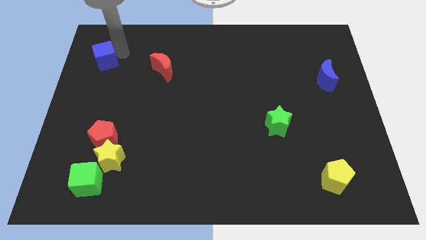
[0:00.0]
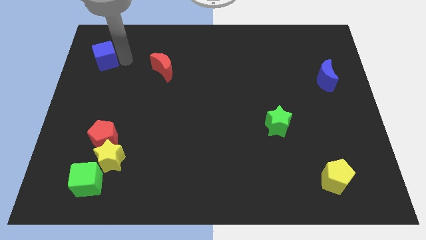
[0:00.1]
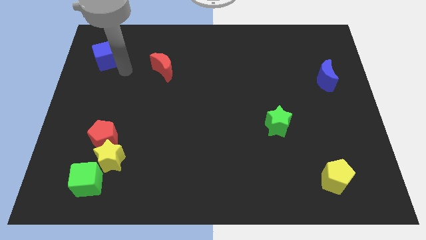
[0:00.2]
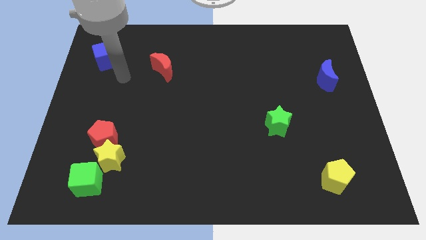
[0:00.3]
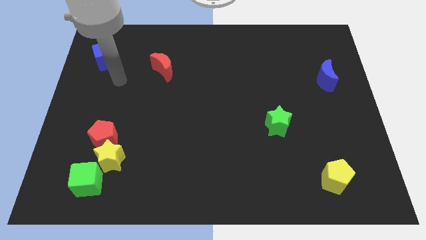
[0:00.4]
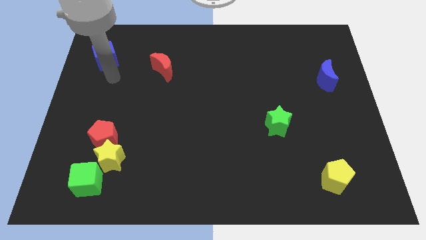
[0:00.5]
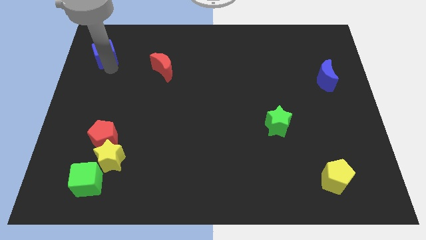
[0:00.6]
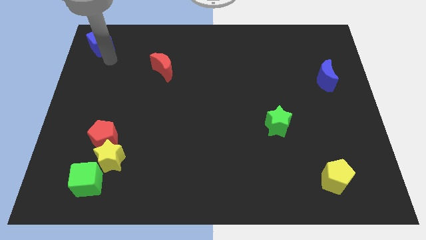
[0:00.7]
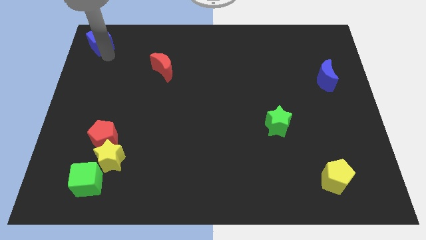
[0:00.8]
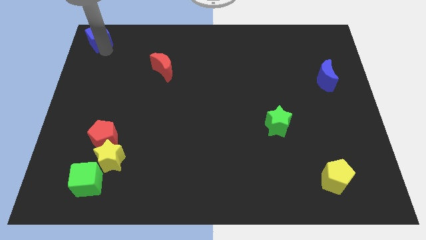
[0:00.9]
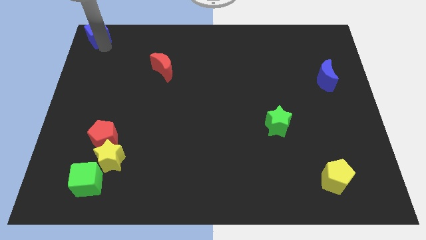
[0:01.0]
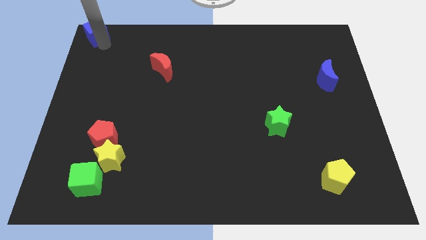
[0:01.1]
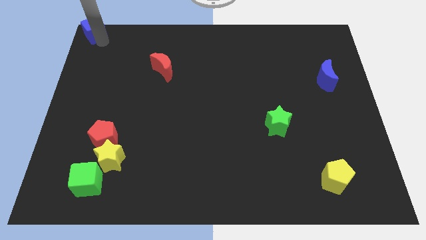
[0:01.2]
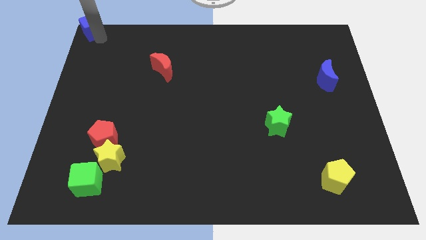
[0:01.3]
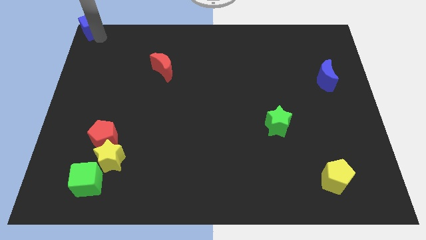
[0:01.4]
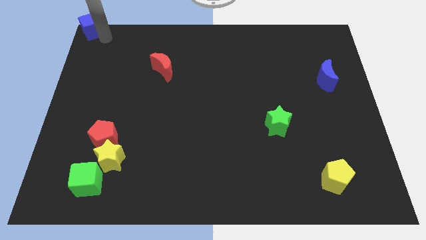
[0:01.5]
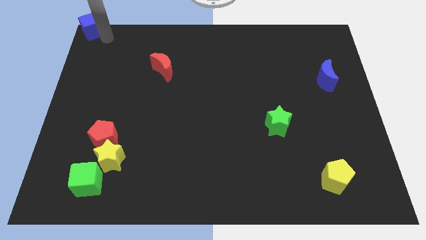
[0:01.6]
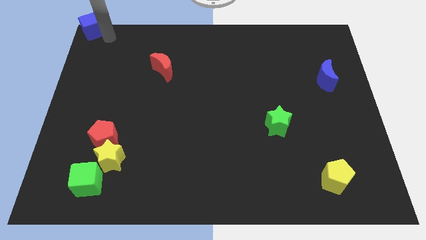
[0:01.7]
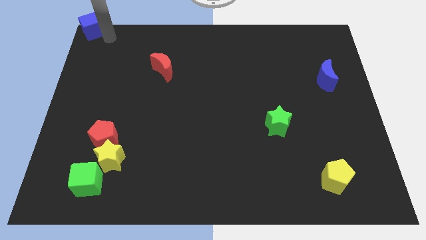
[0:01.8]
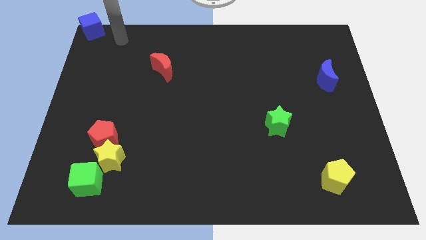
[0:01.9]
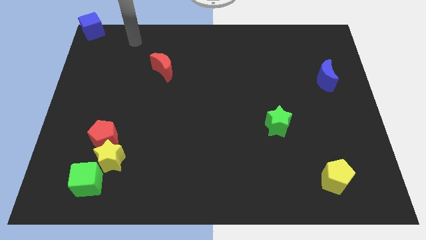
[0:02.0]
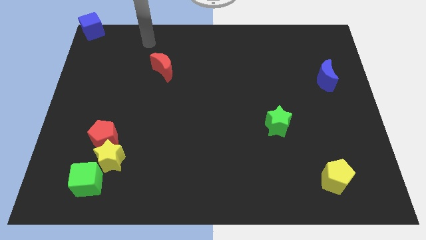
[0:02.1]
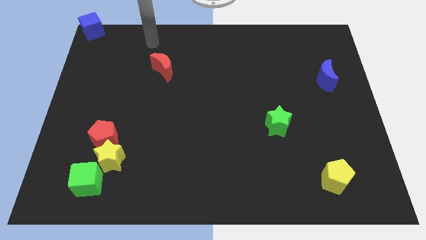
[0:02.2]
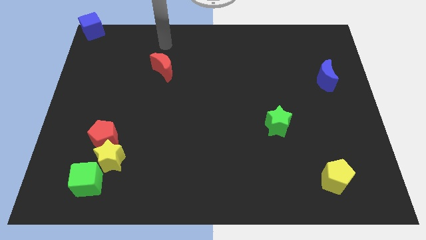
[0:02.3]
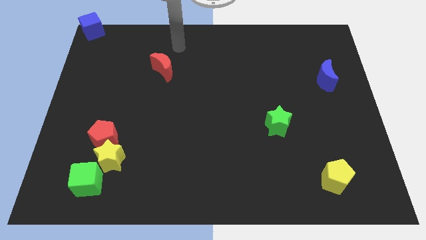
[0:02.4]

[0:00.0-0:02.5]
move the blue cube towards the top corner of the board

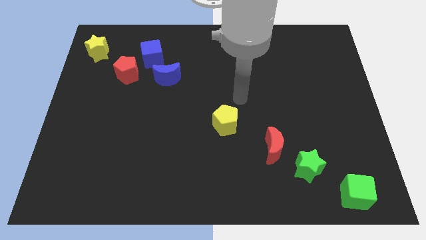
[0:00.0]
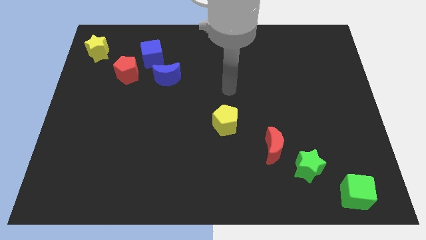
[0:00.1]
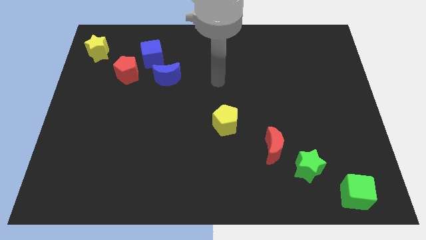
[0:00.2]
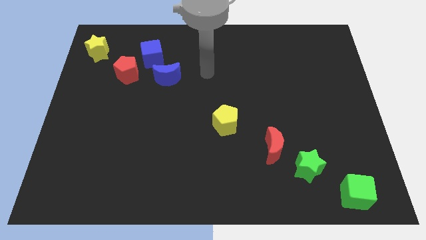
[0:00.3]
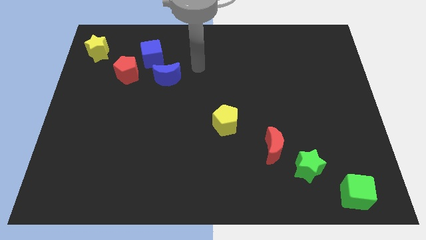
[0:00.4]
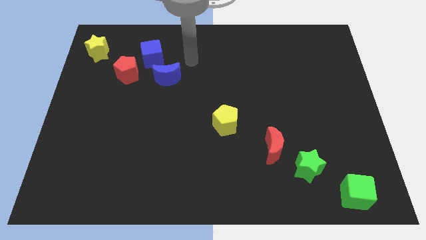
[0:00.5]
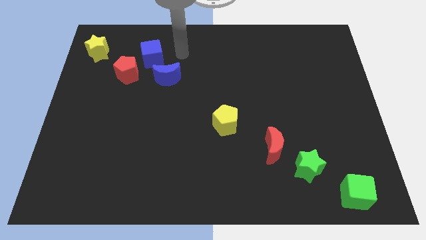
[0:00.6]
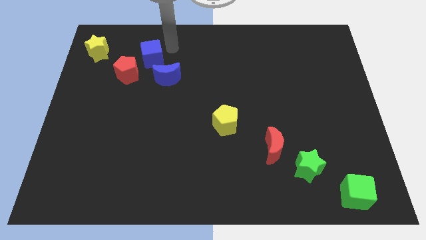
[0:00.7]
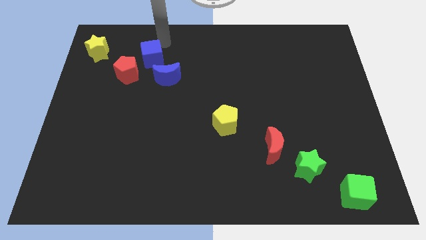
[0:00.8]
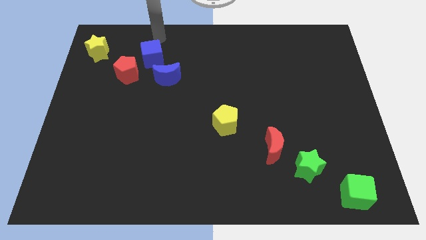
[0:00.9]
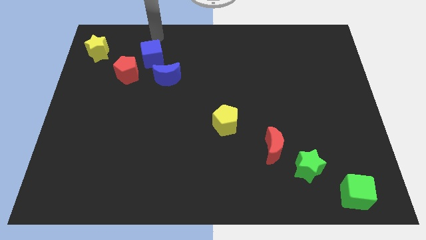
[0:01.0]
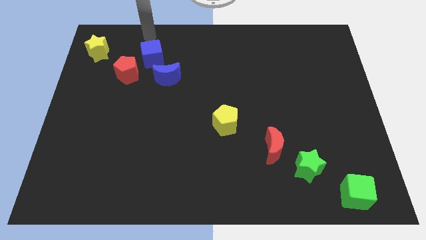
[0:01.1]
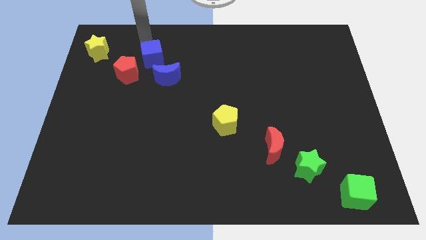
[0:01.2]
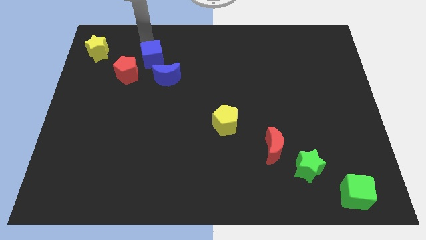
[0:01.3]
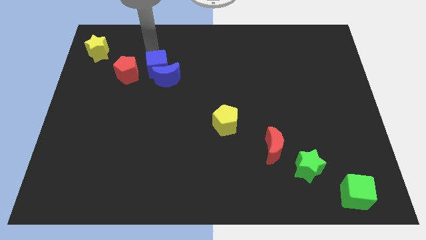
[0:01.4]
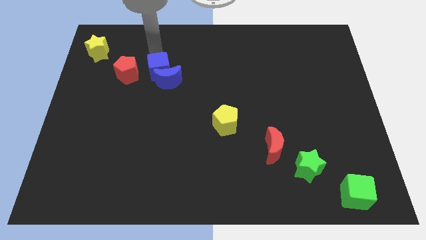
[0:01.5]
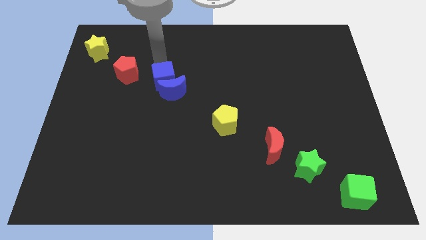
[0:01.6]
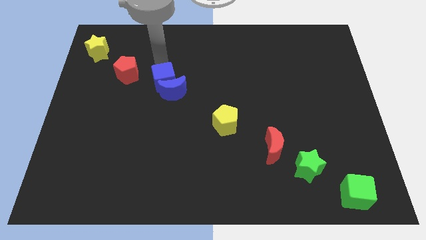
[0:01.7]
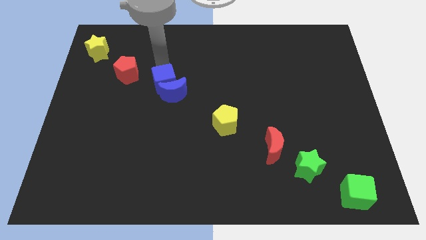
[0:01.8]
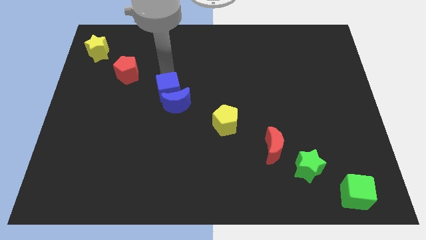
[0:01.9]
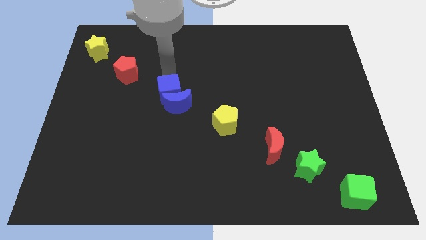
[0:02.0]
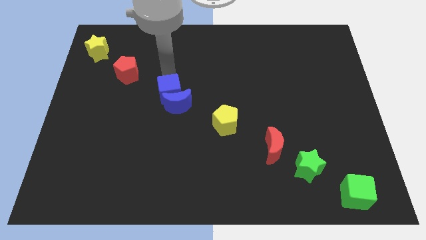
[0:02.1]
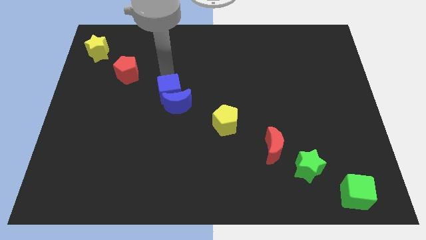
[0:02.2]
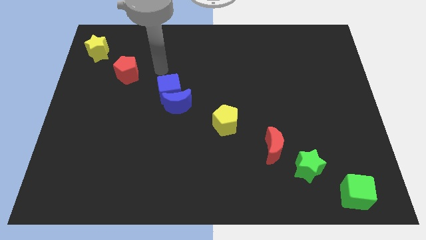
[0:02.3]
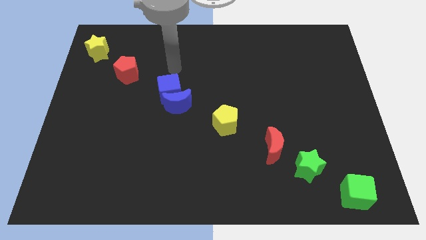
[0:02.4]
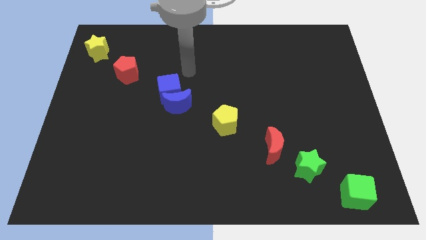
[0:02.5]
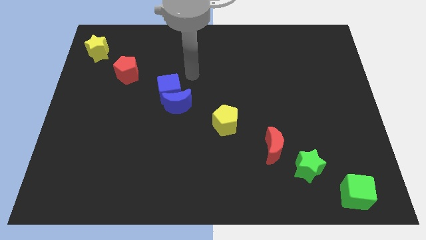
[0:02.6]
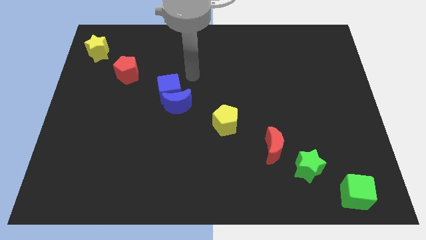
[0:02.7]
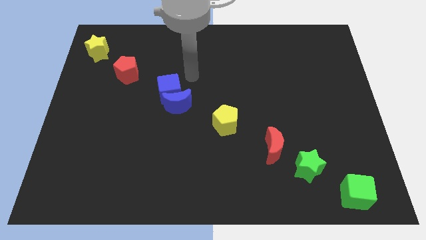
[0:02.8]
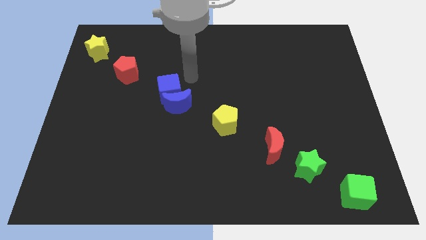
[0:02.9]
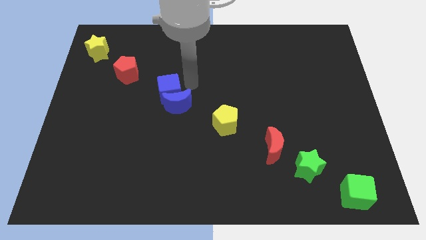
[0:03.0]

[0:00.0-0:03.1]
push the blue cube into the blue moon

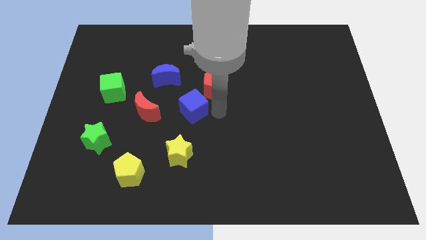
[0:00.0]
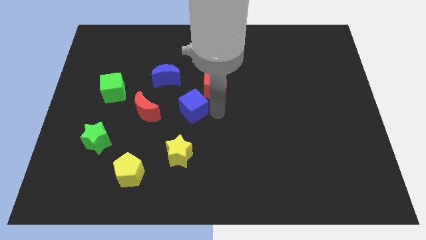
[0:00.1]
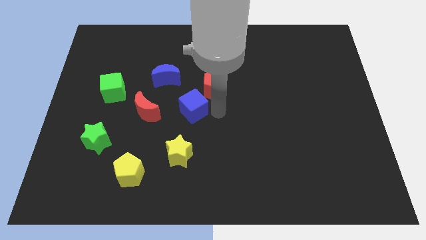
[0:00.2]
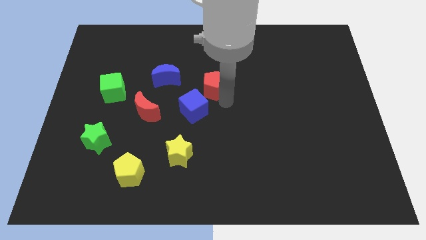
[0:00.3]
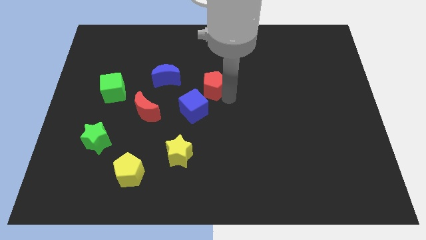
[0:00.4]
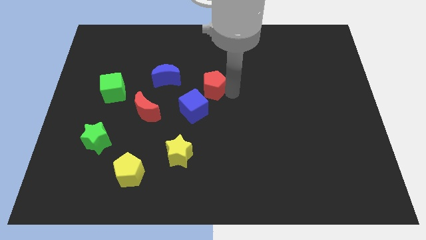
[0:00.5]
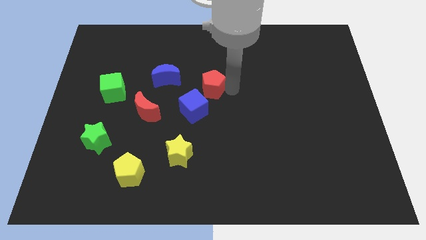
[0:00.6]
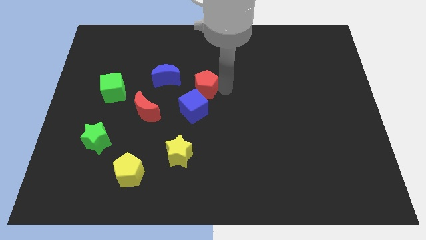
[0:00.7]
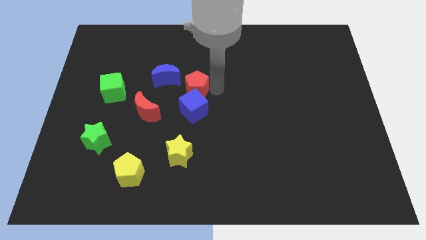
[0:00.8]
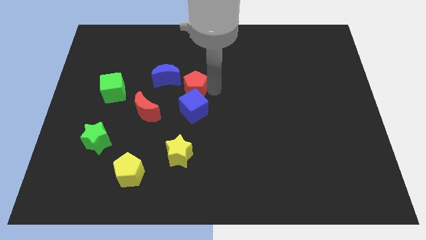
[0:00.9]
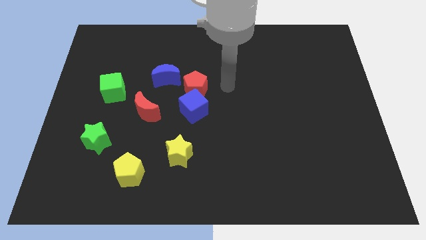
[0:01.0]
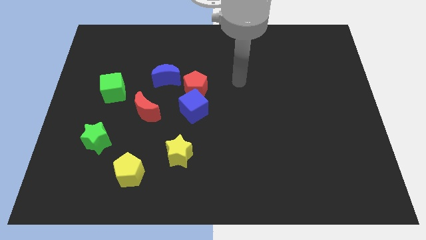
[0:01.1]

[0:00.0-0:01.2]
move the red pentagon to the top of the blue cube

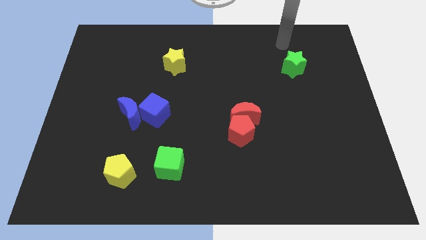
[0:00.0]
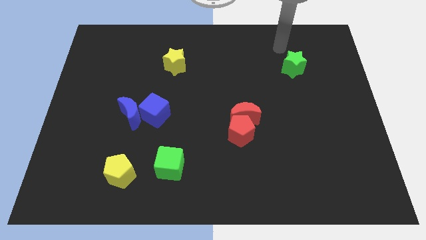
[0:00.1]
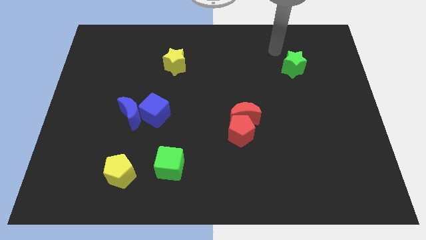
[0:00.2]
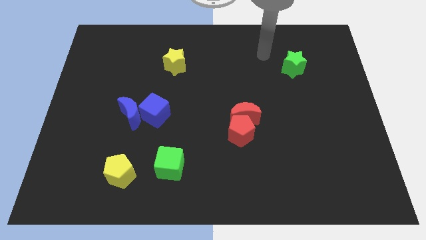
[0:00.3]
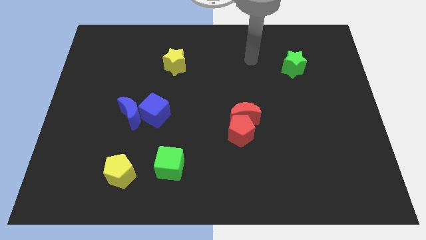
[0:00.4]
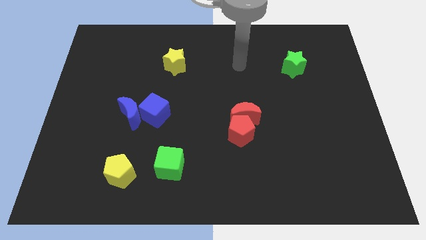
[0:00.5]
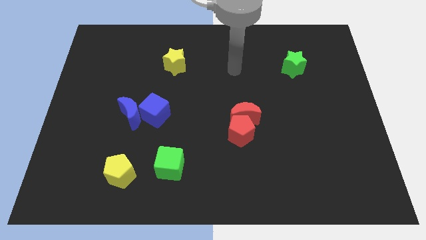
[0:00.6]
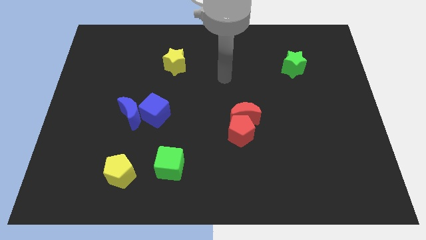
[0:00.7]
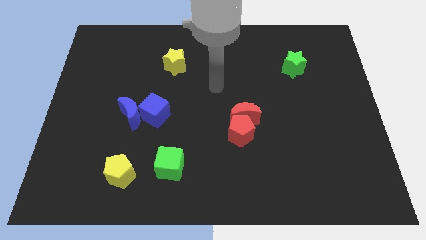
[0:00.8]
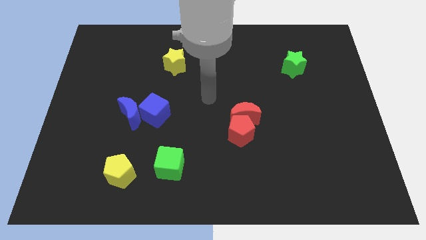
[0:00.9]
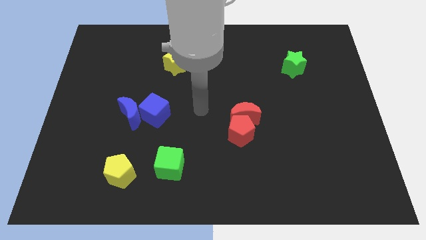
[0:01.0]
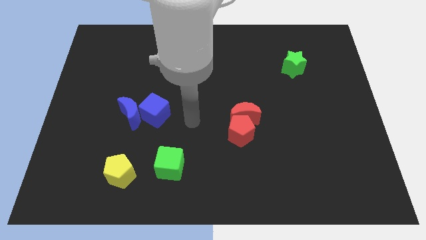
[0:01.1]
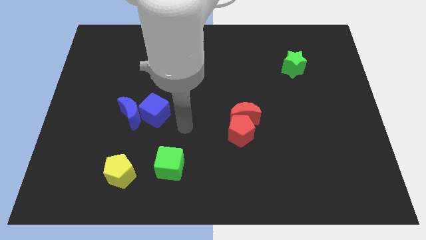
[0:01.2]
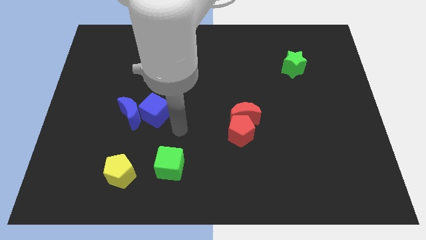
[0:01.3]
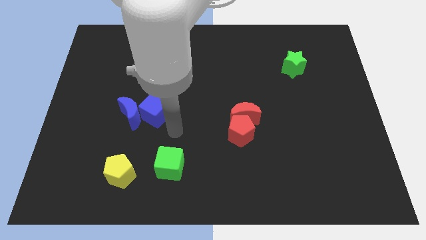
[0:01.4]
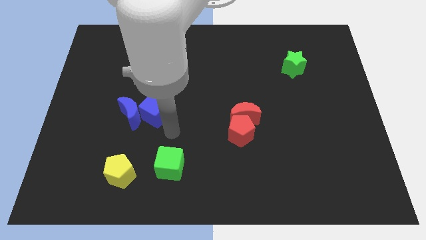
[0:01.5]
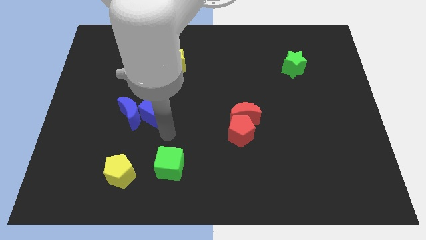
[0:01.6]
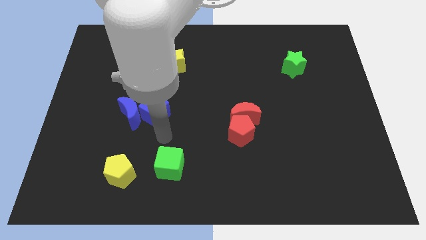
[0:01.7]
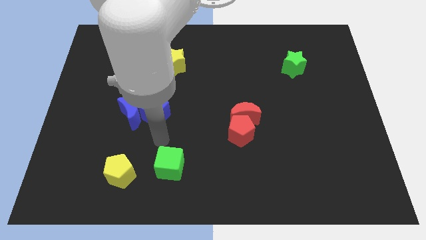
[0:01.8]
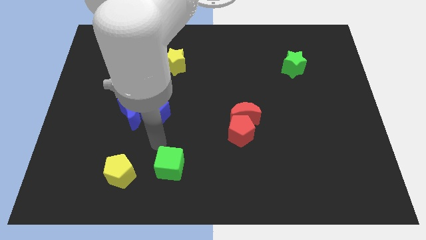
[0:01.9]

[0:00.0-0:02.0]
point the arm in between the green cube and the blue cube

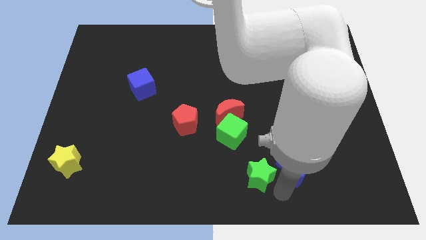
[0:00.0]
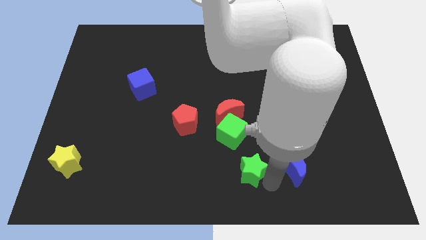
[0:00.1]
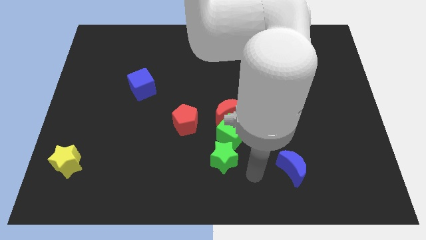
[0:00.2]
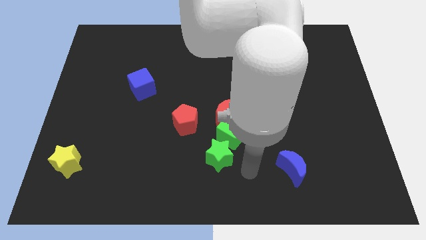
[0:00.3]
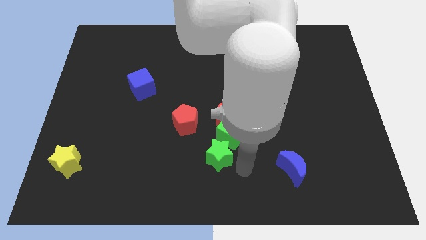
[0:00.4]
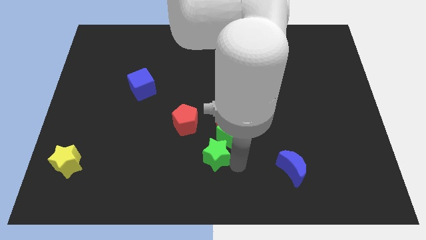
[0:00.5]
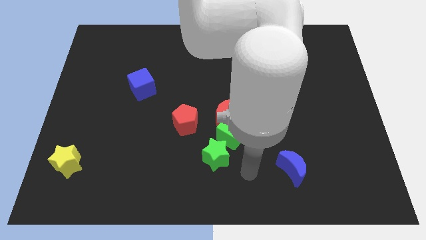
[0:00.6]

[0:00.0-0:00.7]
place green star below green cube
